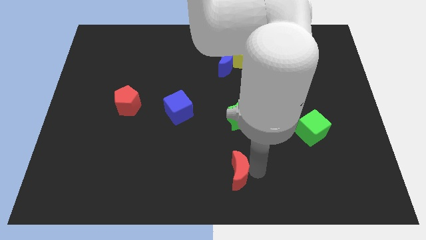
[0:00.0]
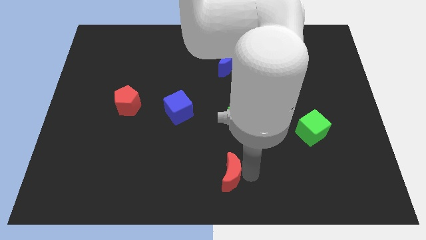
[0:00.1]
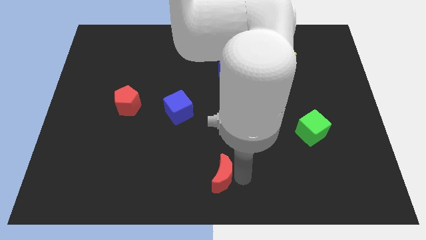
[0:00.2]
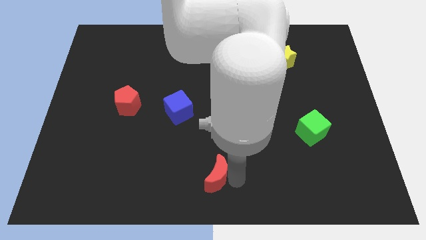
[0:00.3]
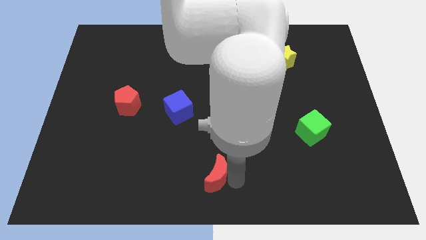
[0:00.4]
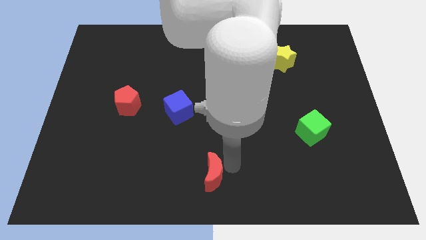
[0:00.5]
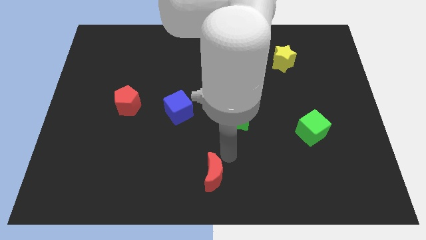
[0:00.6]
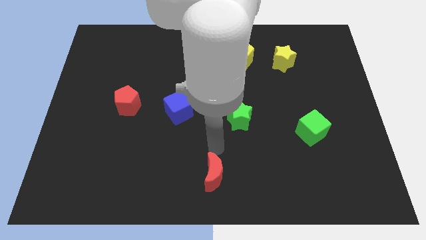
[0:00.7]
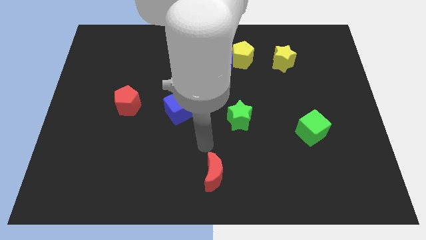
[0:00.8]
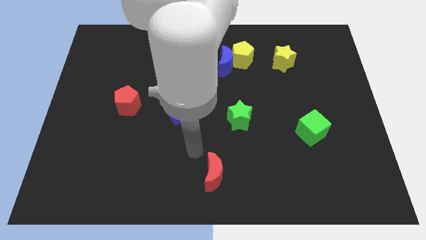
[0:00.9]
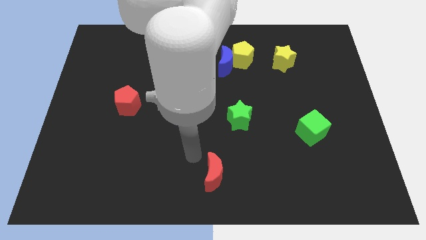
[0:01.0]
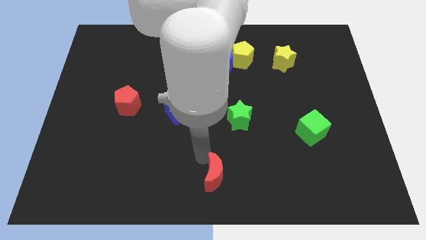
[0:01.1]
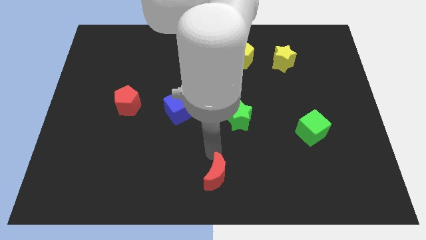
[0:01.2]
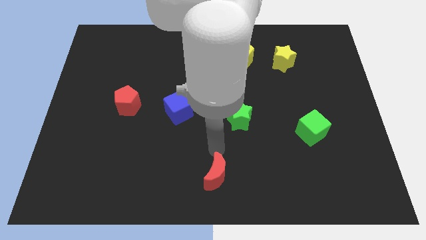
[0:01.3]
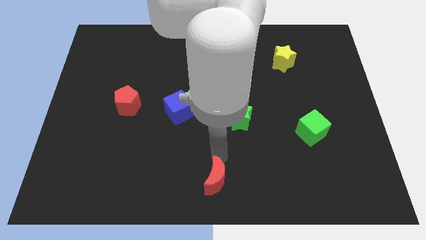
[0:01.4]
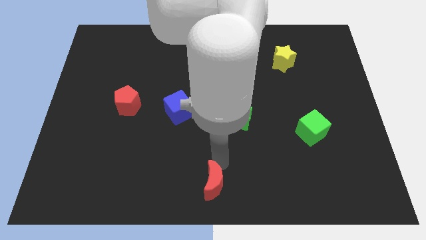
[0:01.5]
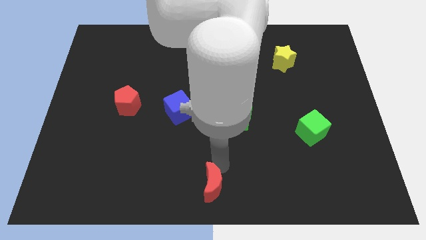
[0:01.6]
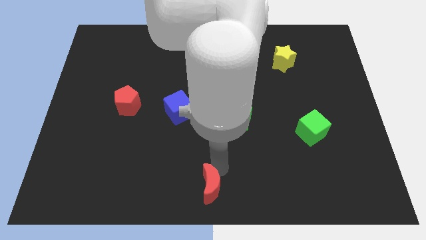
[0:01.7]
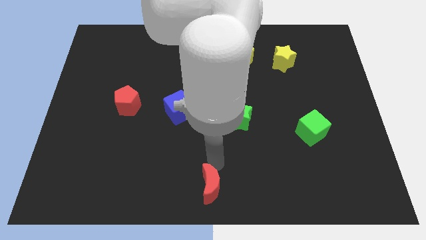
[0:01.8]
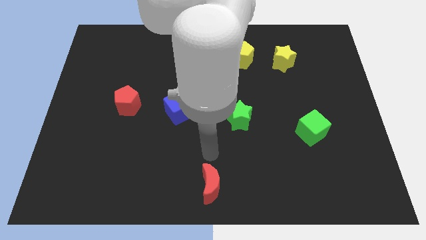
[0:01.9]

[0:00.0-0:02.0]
push the red crescent to the bottom center of the board

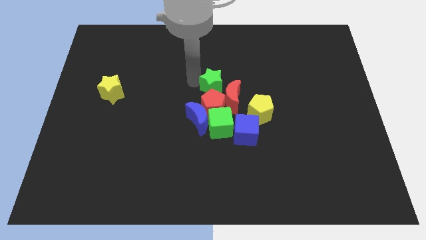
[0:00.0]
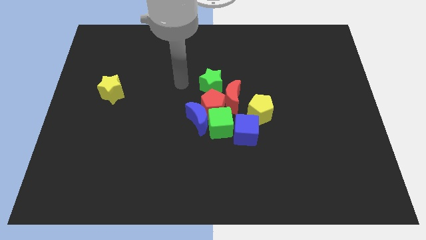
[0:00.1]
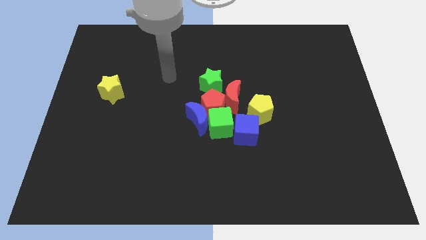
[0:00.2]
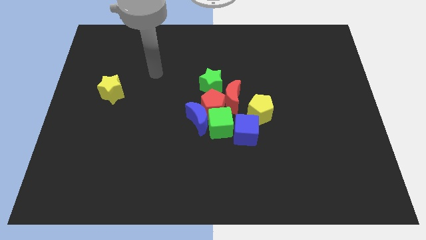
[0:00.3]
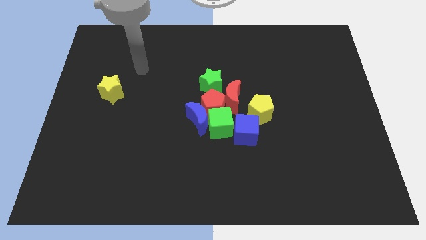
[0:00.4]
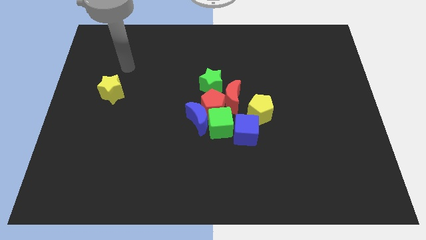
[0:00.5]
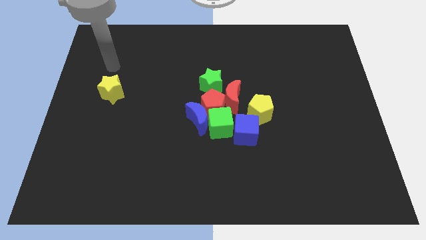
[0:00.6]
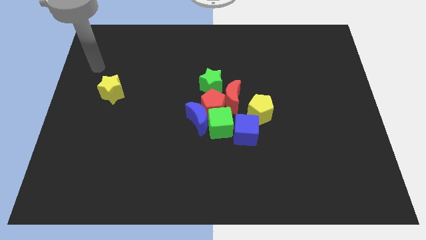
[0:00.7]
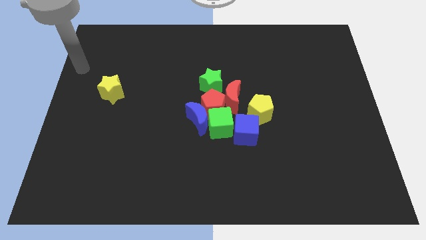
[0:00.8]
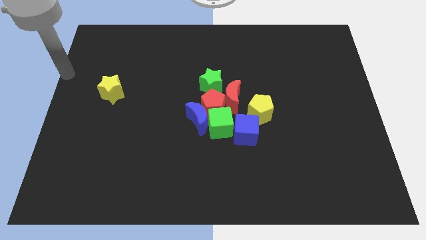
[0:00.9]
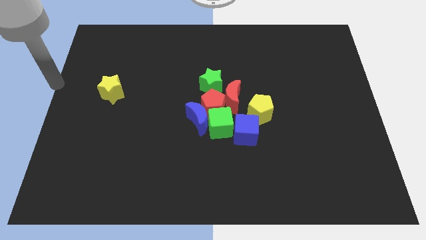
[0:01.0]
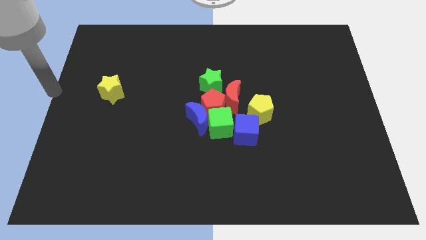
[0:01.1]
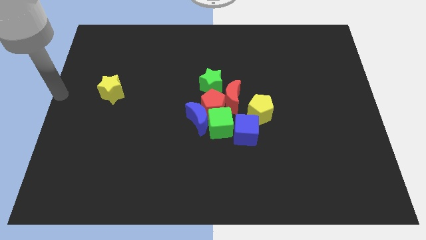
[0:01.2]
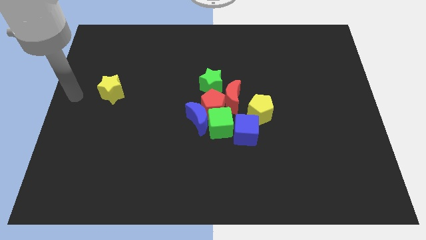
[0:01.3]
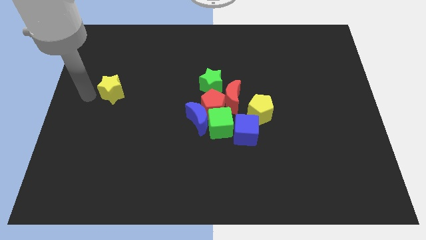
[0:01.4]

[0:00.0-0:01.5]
point your arm at the left of the yellow star

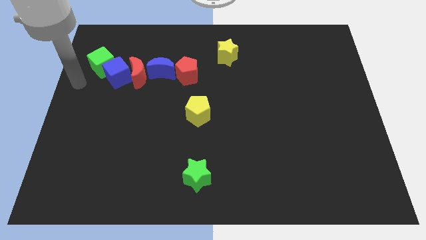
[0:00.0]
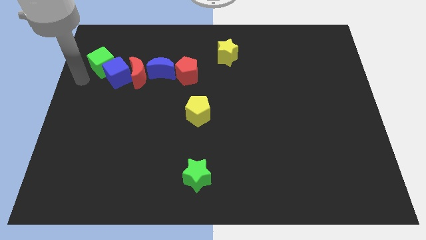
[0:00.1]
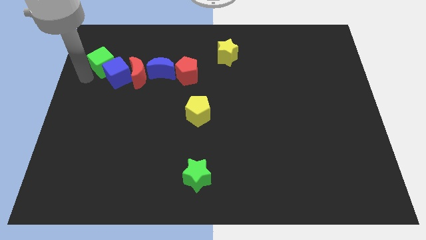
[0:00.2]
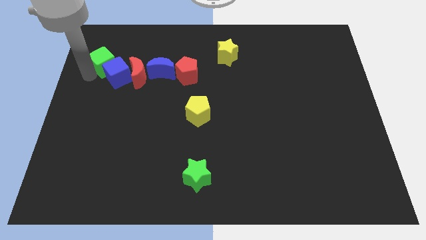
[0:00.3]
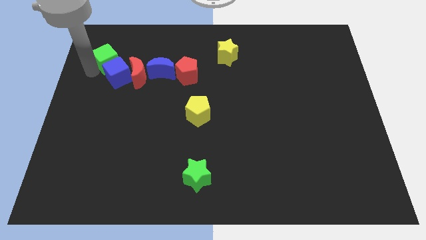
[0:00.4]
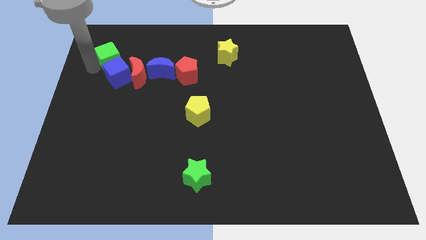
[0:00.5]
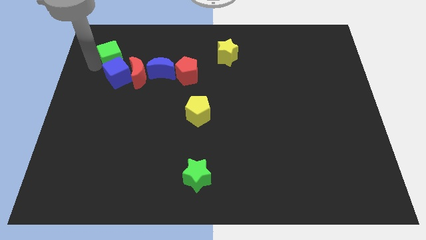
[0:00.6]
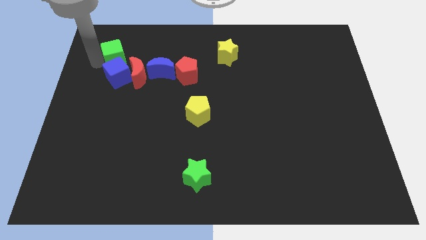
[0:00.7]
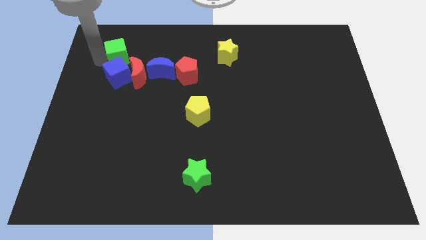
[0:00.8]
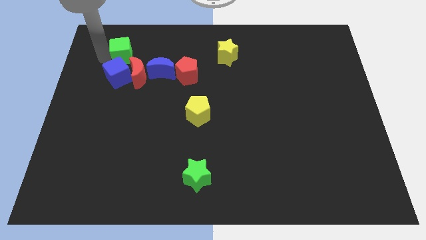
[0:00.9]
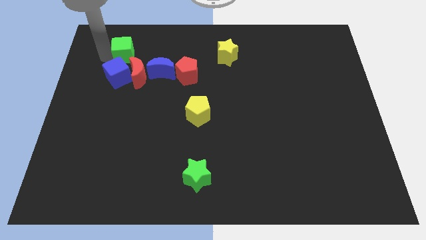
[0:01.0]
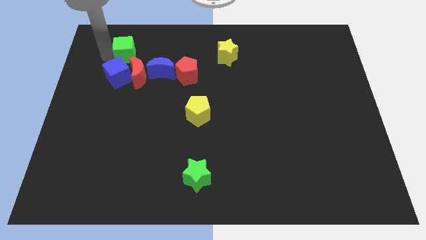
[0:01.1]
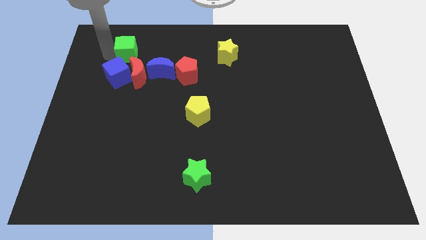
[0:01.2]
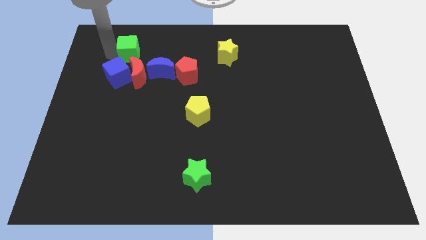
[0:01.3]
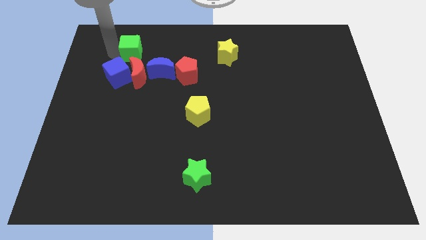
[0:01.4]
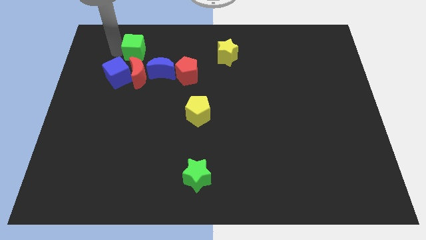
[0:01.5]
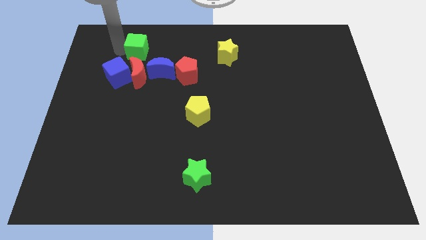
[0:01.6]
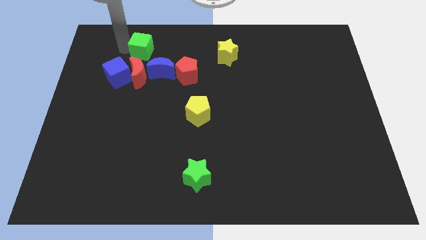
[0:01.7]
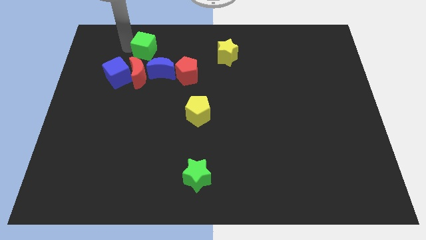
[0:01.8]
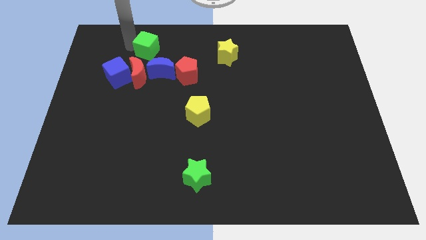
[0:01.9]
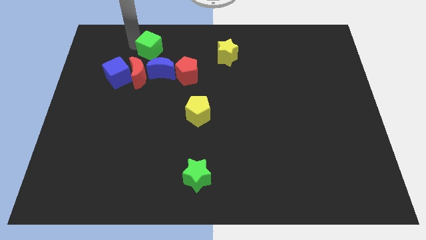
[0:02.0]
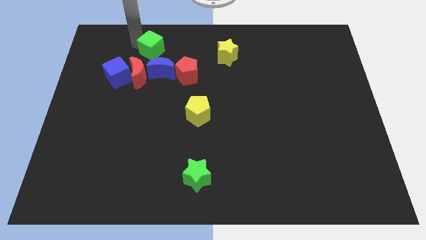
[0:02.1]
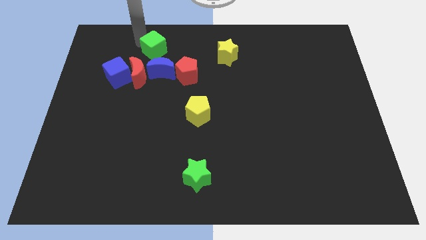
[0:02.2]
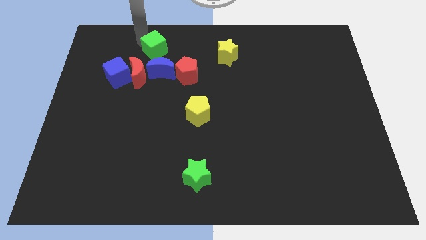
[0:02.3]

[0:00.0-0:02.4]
push the green cube to the top of blue crescent

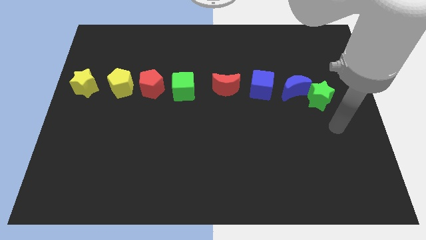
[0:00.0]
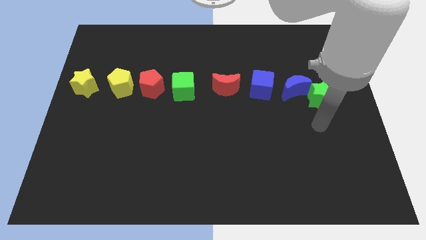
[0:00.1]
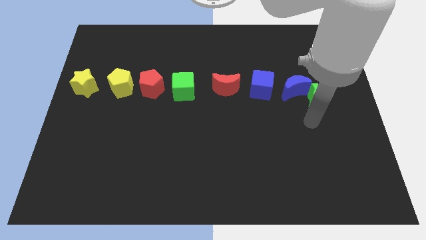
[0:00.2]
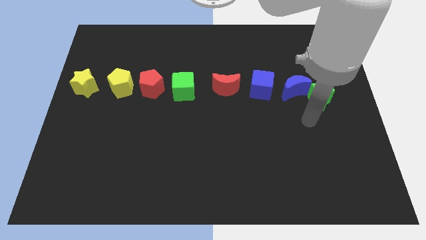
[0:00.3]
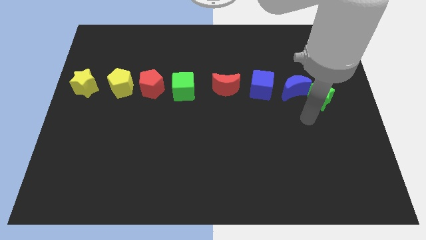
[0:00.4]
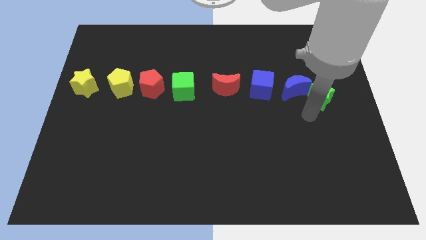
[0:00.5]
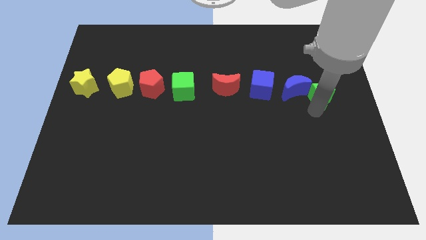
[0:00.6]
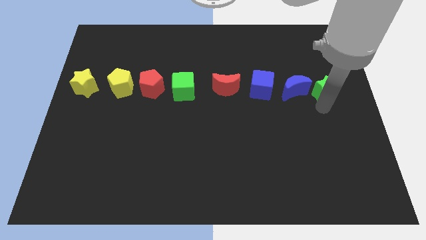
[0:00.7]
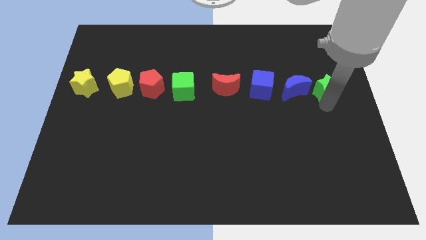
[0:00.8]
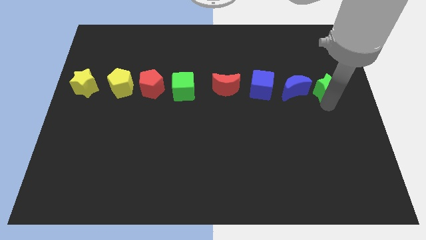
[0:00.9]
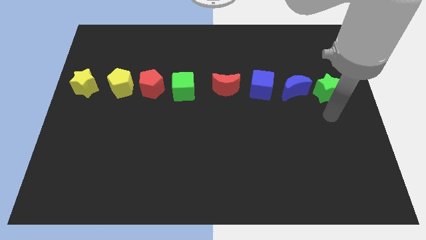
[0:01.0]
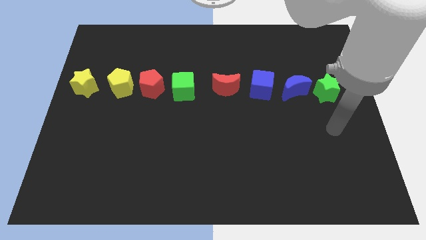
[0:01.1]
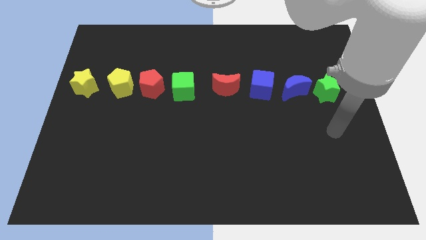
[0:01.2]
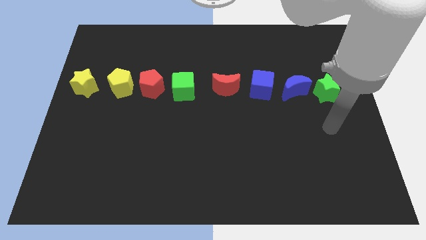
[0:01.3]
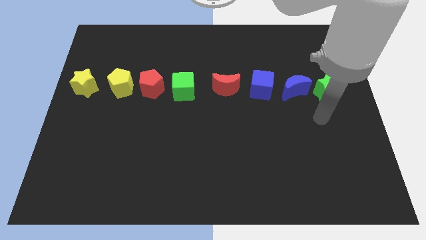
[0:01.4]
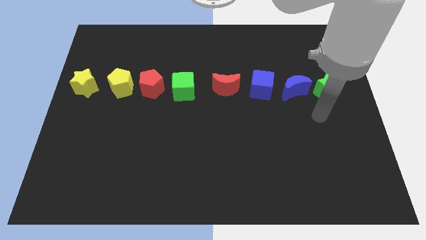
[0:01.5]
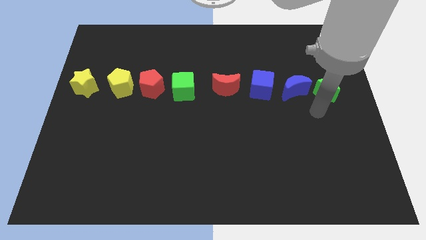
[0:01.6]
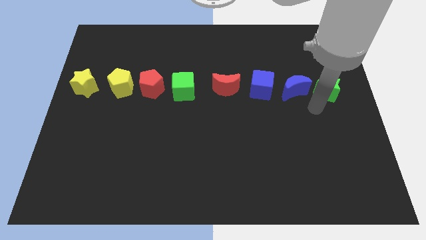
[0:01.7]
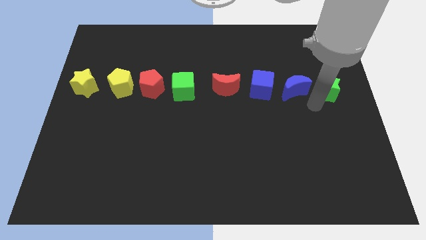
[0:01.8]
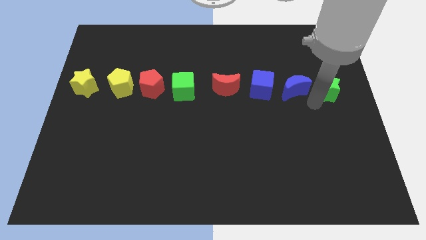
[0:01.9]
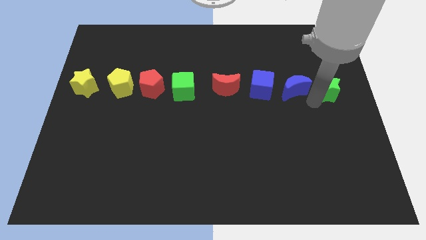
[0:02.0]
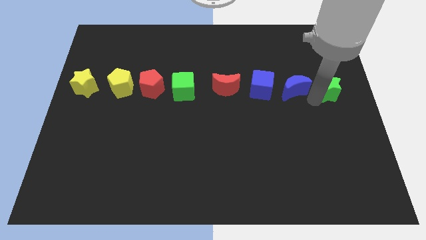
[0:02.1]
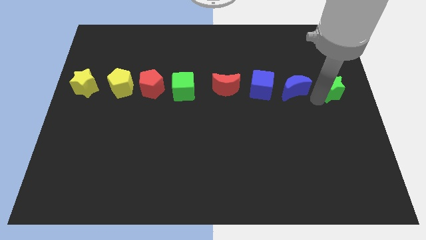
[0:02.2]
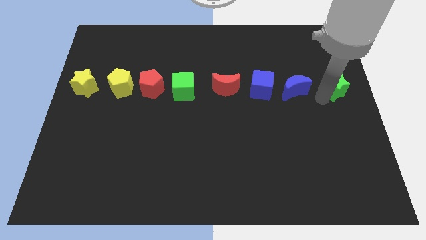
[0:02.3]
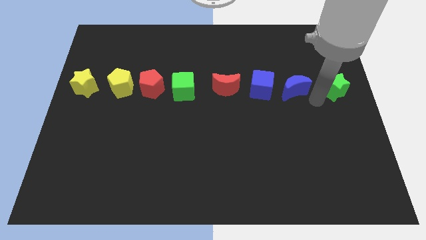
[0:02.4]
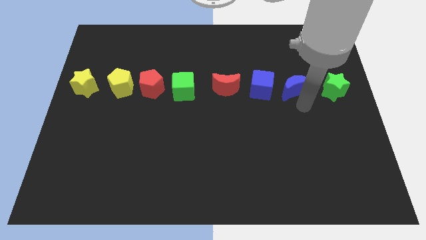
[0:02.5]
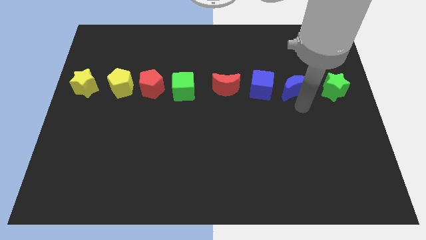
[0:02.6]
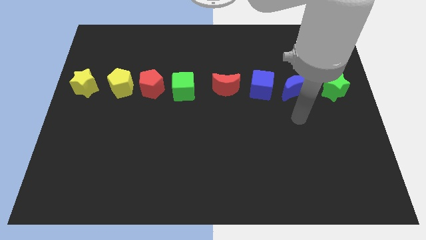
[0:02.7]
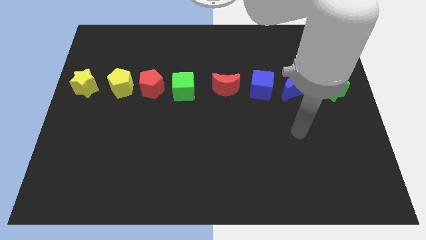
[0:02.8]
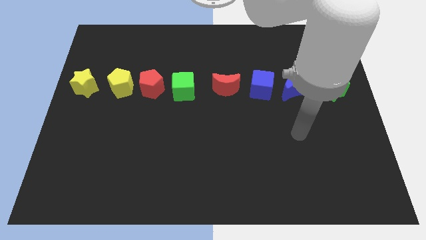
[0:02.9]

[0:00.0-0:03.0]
push green star beside red crescent
